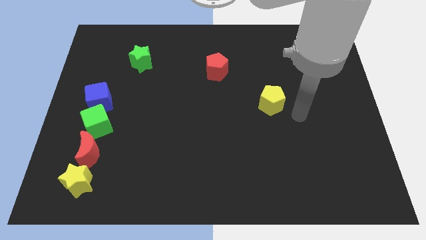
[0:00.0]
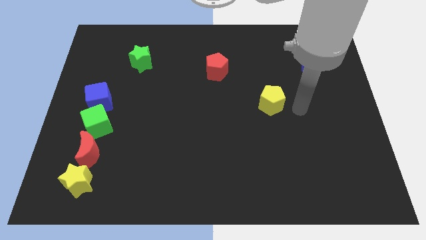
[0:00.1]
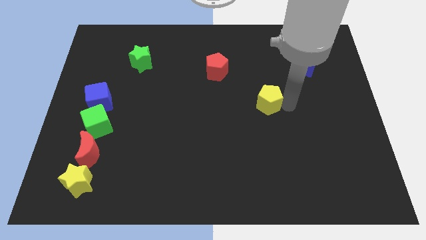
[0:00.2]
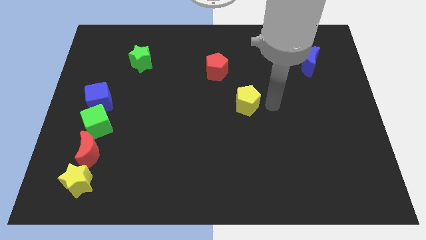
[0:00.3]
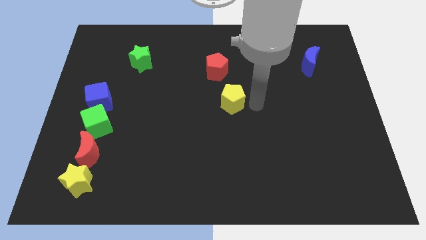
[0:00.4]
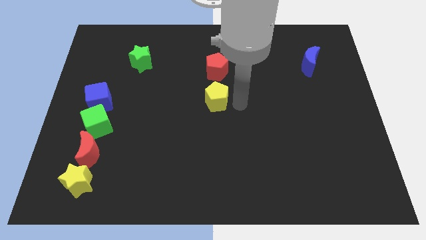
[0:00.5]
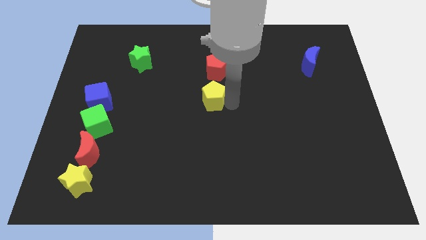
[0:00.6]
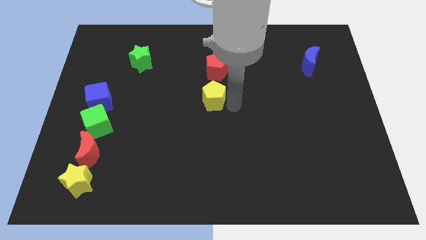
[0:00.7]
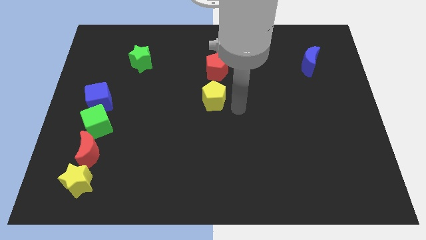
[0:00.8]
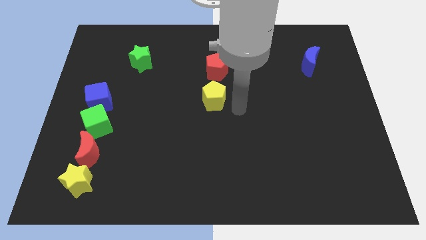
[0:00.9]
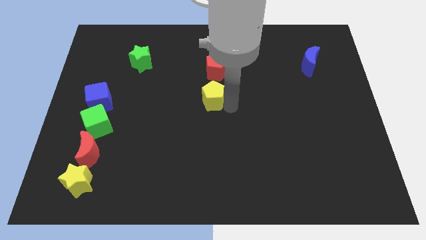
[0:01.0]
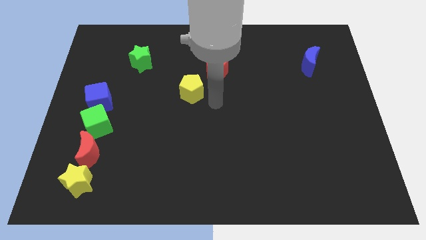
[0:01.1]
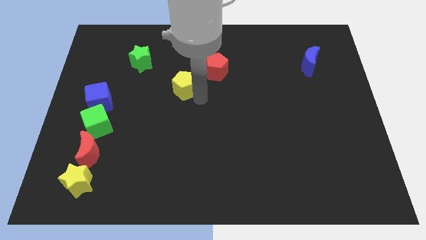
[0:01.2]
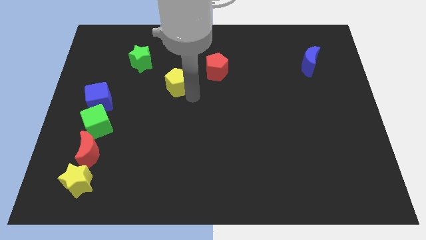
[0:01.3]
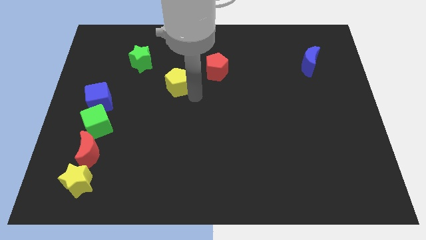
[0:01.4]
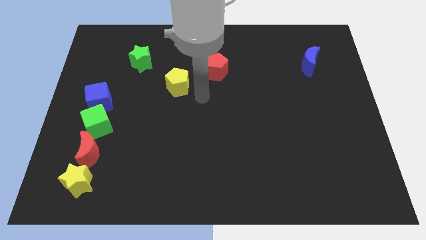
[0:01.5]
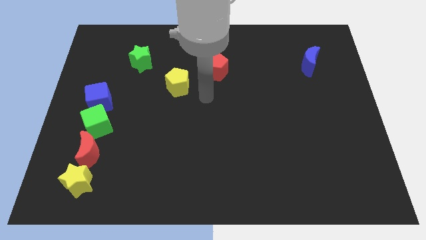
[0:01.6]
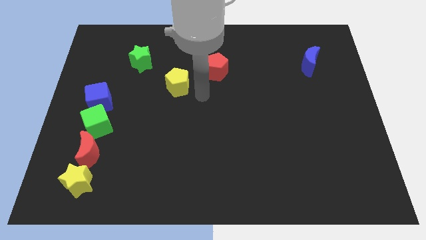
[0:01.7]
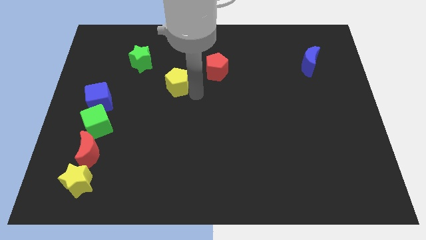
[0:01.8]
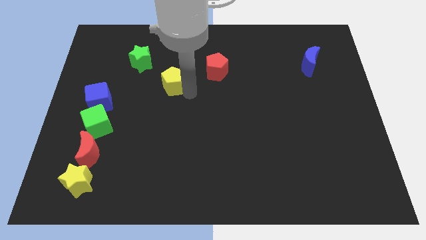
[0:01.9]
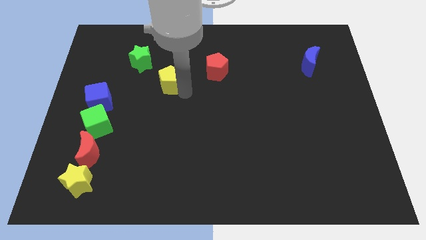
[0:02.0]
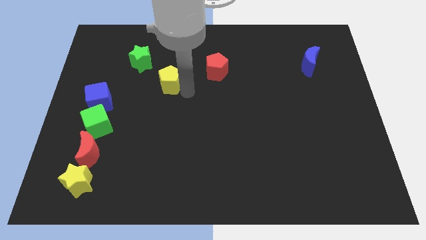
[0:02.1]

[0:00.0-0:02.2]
push the yellow pentagon to bottom left to the green star

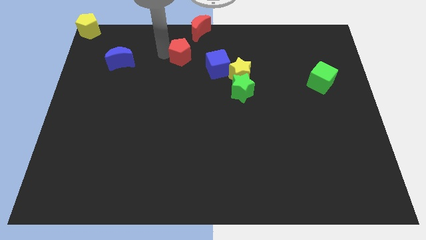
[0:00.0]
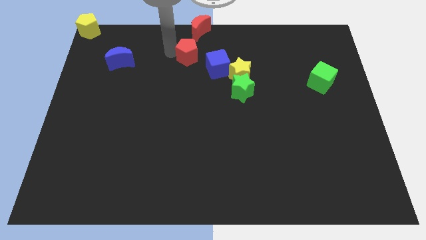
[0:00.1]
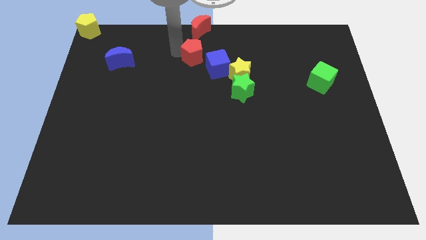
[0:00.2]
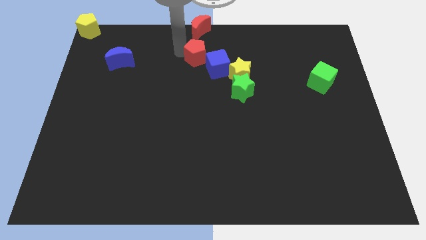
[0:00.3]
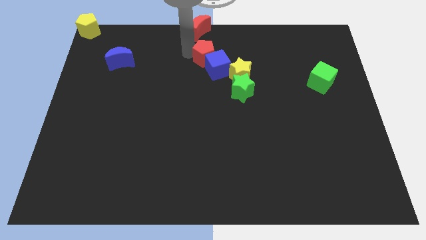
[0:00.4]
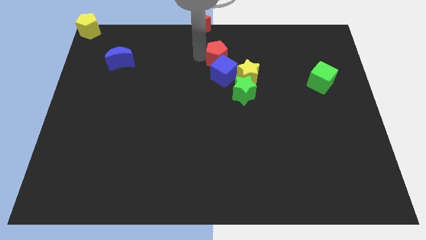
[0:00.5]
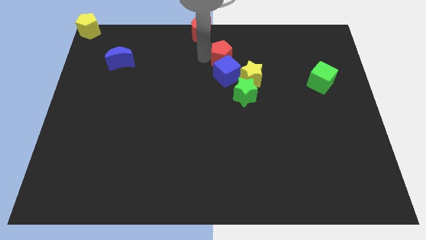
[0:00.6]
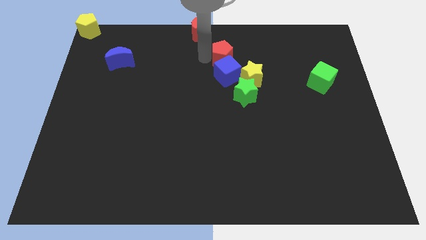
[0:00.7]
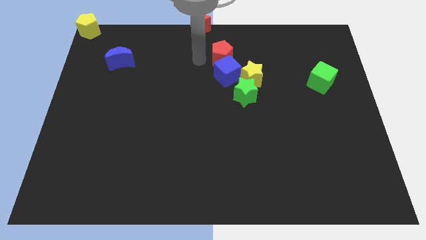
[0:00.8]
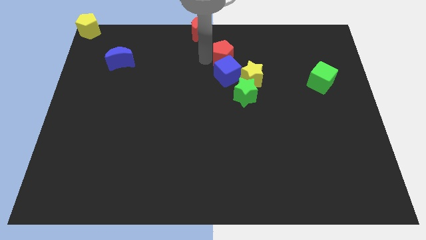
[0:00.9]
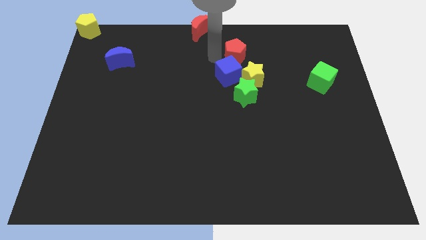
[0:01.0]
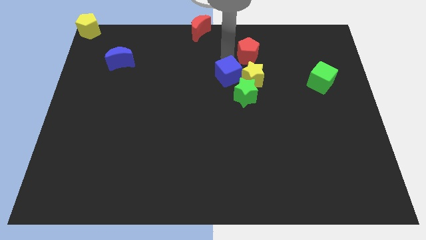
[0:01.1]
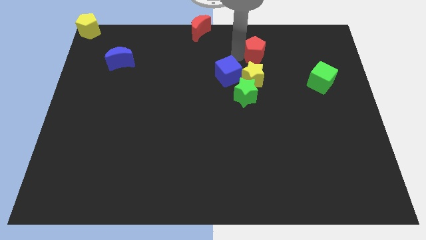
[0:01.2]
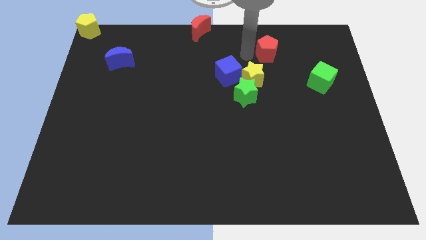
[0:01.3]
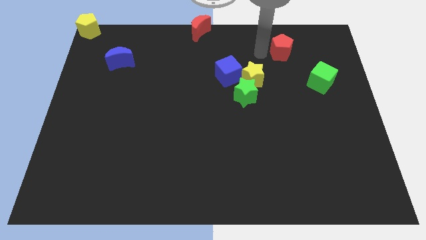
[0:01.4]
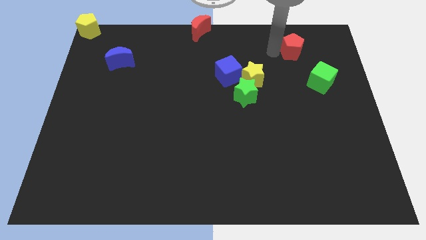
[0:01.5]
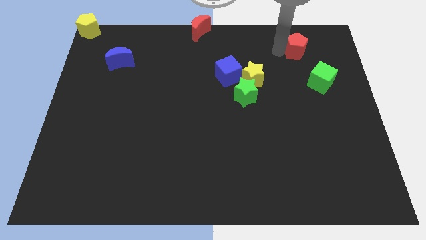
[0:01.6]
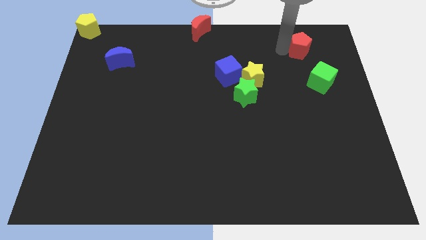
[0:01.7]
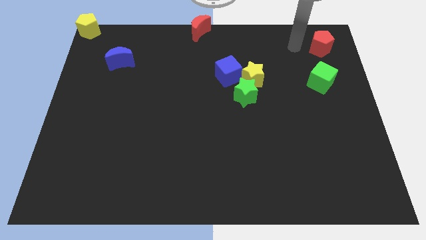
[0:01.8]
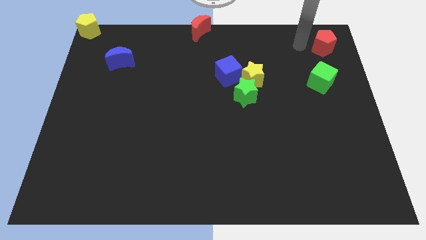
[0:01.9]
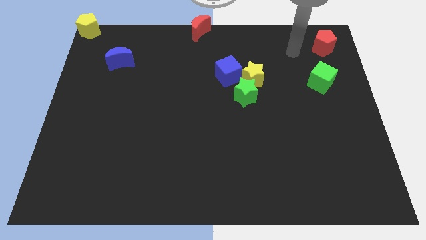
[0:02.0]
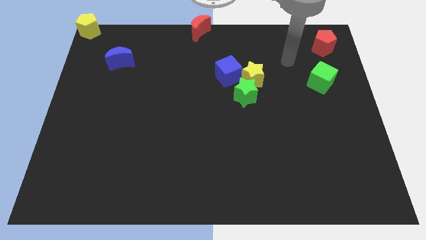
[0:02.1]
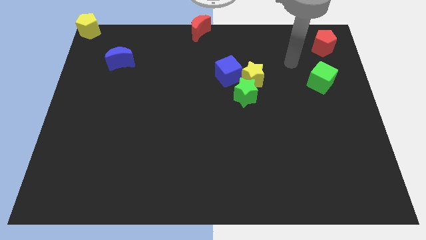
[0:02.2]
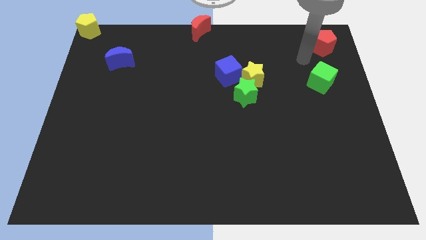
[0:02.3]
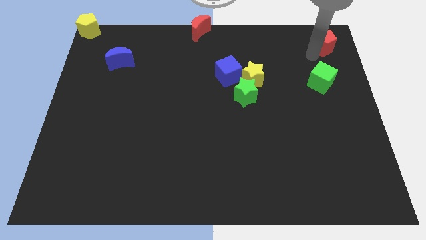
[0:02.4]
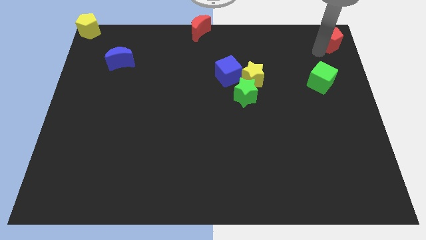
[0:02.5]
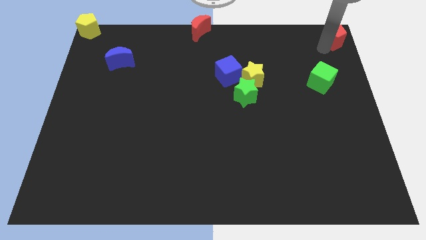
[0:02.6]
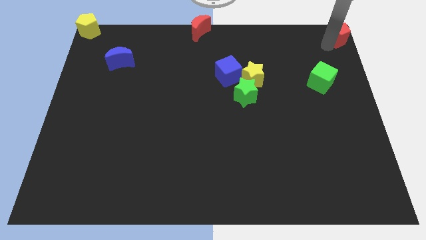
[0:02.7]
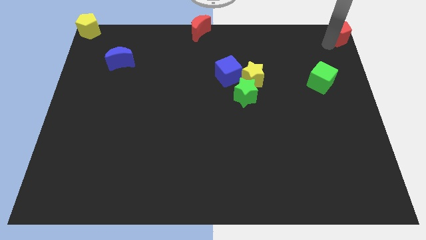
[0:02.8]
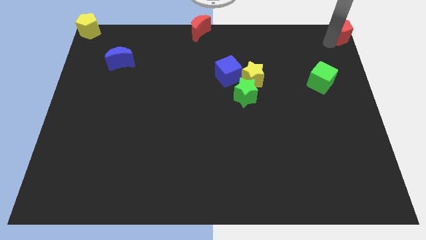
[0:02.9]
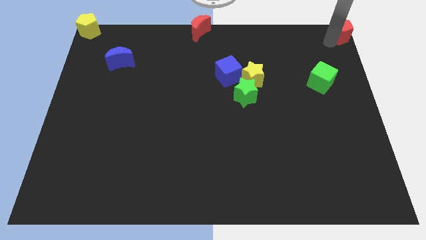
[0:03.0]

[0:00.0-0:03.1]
place the red pentagon towards the right top corner

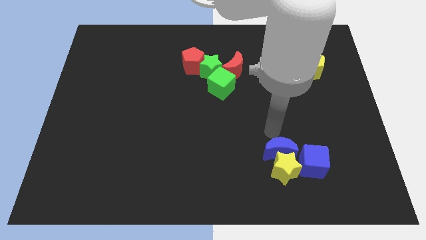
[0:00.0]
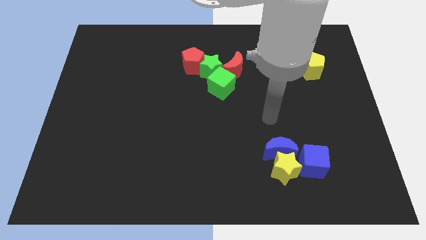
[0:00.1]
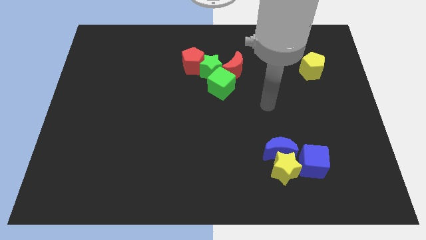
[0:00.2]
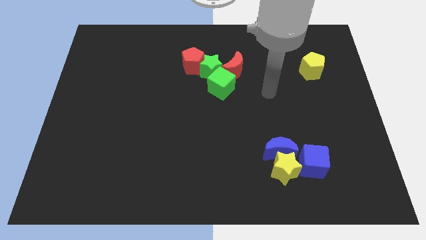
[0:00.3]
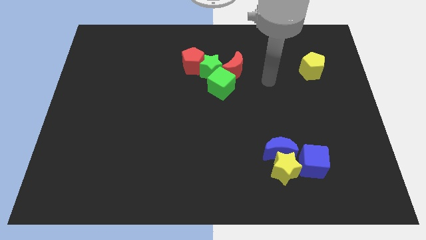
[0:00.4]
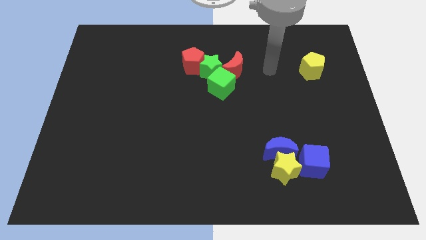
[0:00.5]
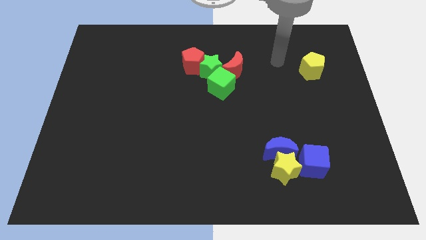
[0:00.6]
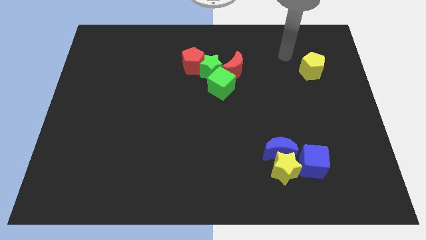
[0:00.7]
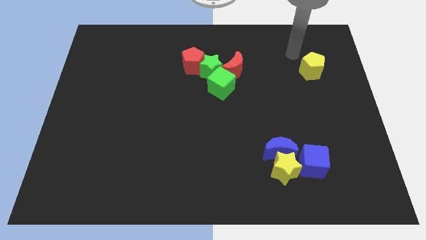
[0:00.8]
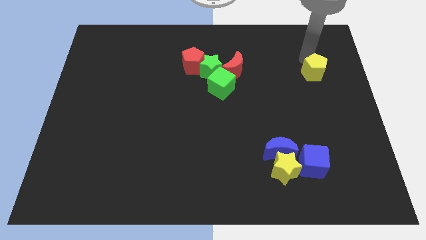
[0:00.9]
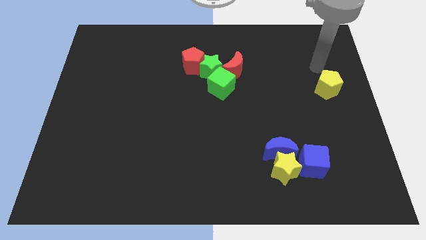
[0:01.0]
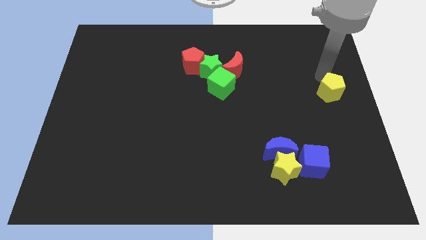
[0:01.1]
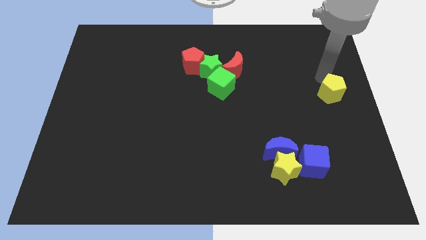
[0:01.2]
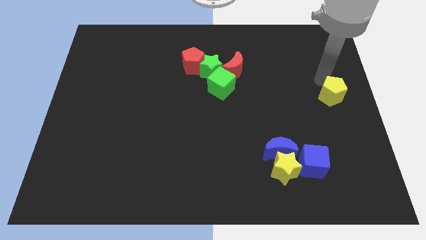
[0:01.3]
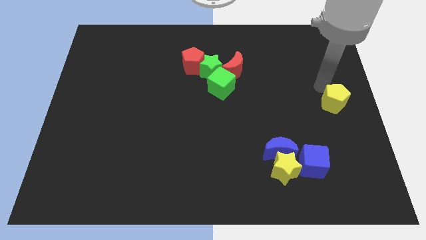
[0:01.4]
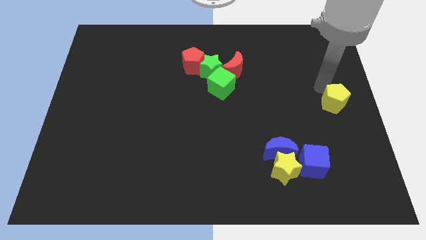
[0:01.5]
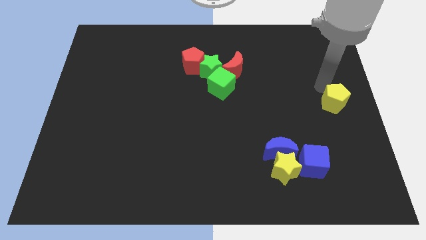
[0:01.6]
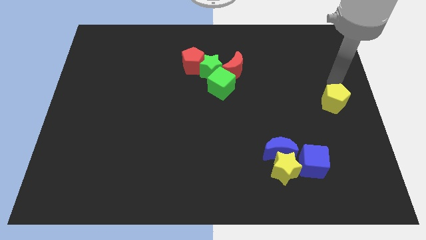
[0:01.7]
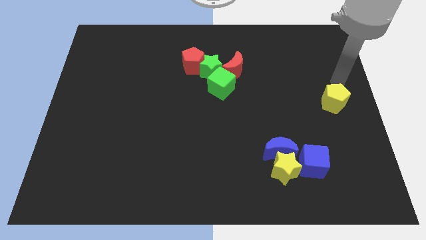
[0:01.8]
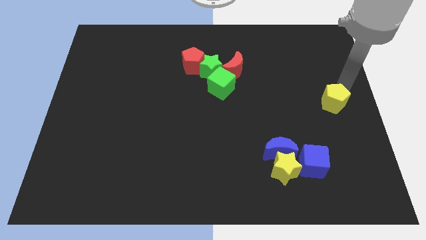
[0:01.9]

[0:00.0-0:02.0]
place the yellow pentagon at the center right of the board

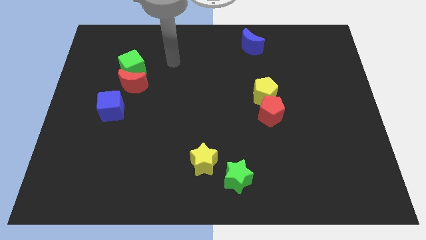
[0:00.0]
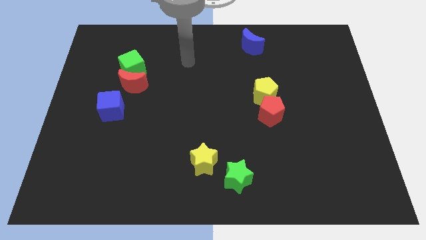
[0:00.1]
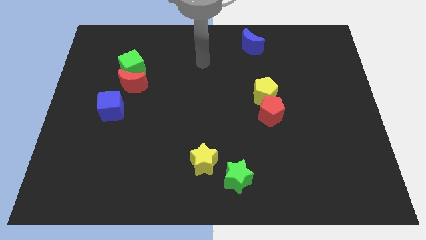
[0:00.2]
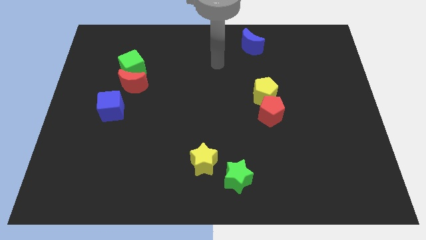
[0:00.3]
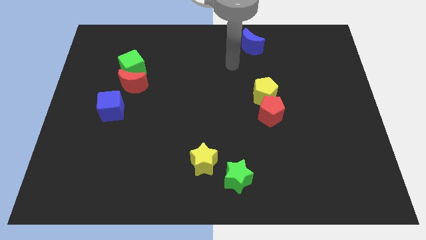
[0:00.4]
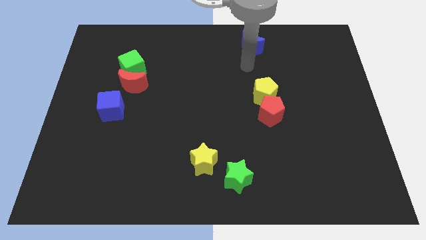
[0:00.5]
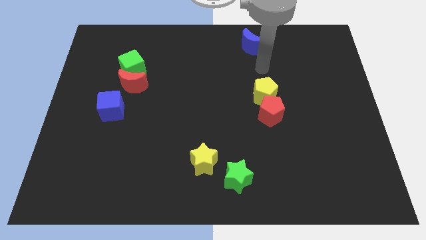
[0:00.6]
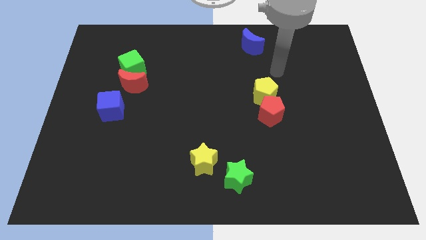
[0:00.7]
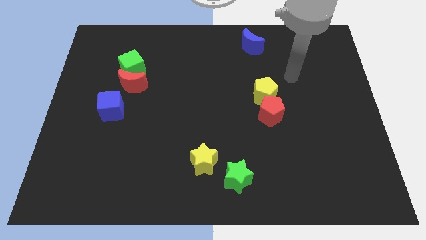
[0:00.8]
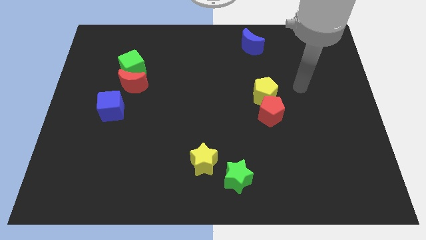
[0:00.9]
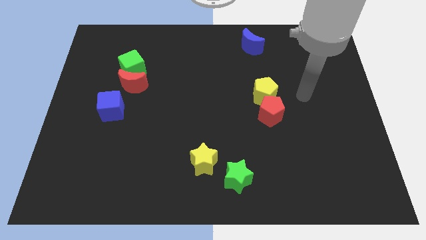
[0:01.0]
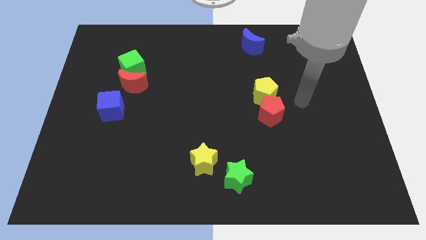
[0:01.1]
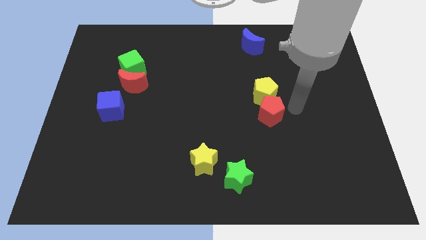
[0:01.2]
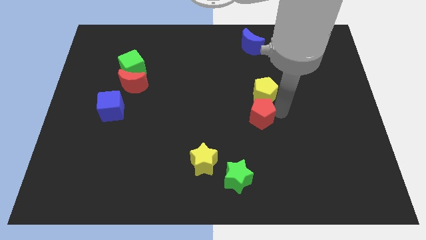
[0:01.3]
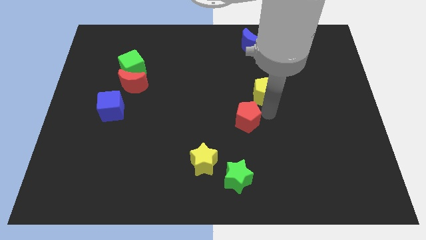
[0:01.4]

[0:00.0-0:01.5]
move yourself away from the green cube

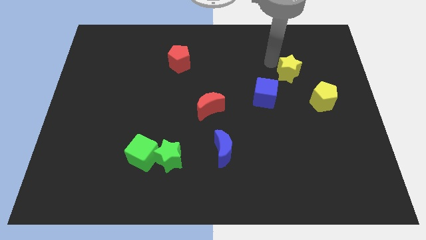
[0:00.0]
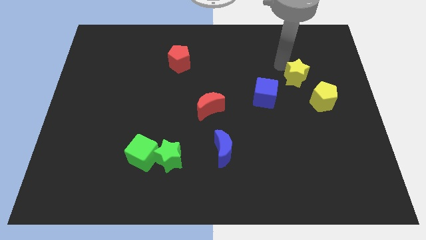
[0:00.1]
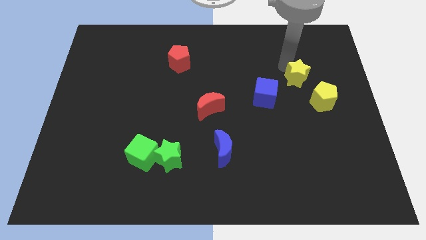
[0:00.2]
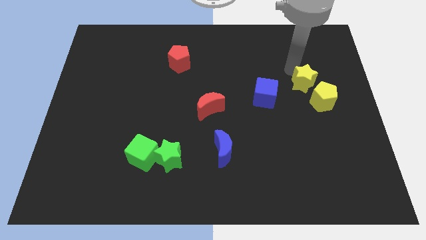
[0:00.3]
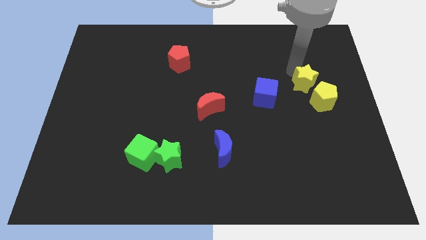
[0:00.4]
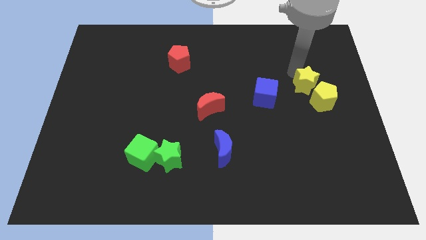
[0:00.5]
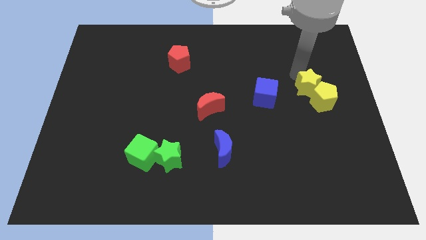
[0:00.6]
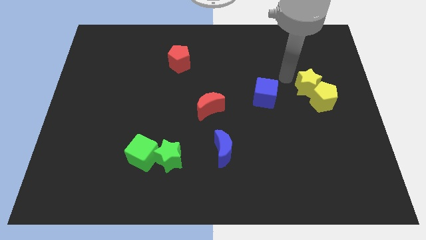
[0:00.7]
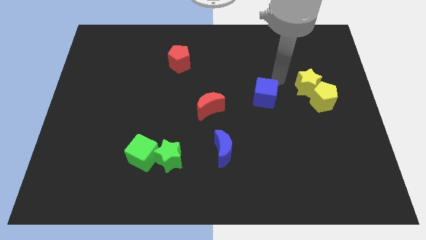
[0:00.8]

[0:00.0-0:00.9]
push yellow star into yellow pentagon
